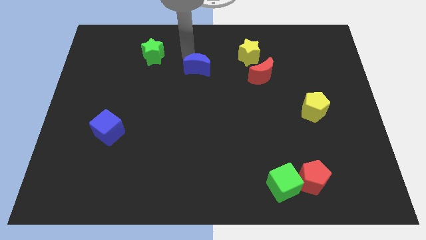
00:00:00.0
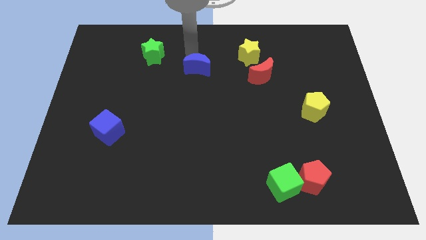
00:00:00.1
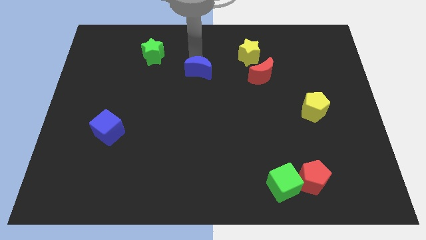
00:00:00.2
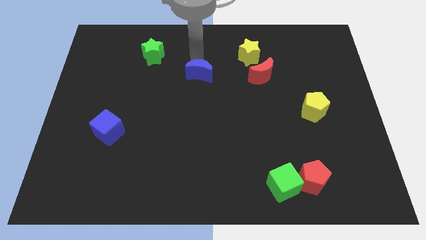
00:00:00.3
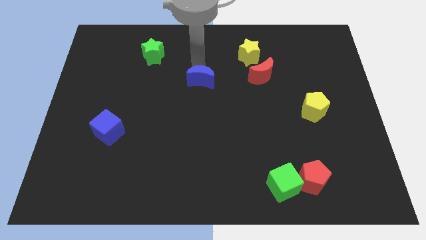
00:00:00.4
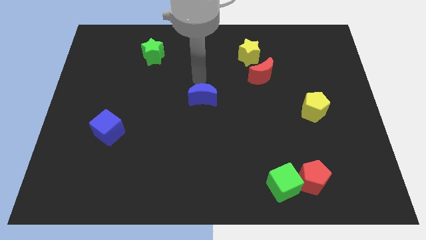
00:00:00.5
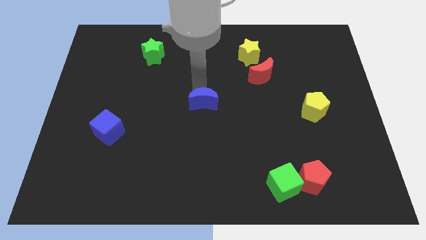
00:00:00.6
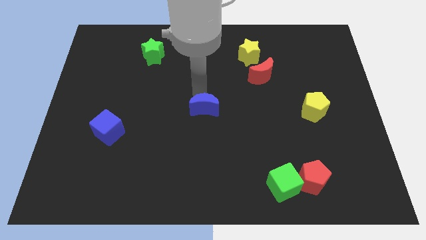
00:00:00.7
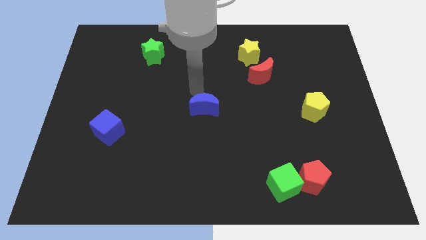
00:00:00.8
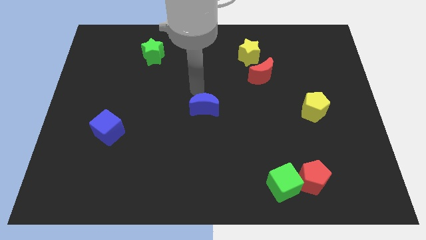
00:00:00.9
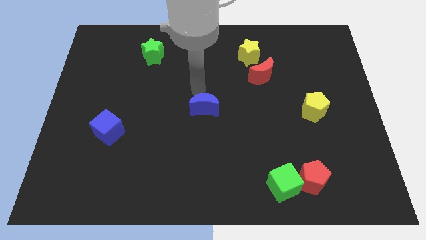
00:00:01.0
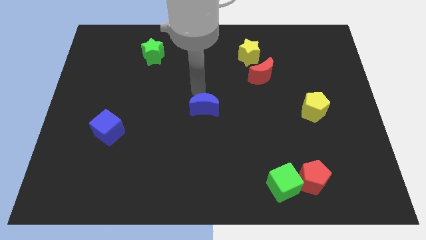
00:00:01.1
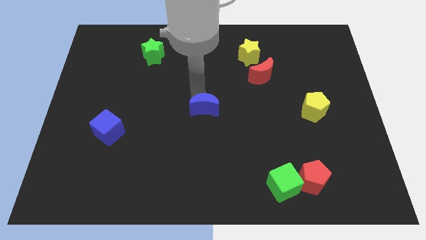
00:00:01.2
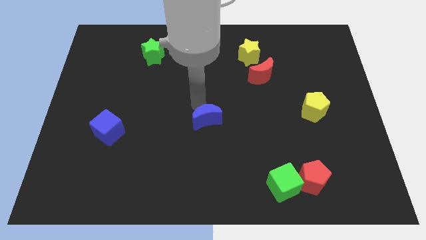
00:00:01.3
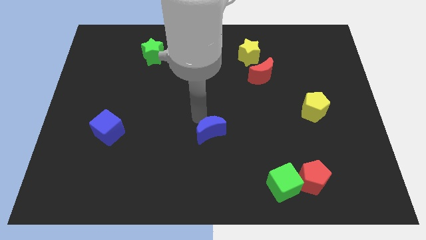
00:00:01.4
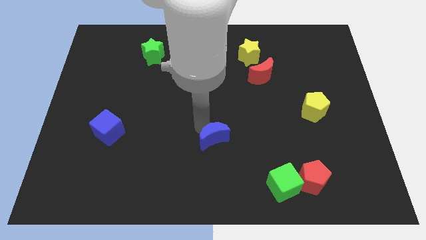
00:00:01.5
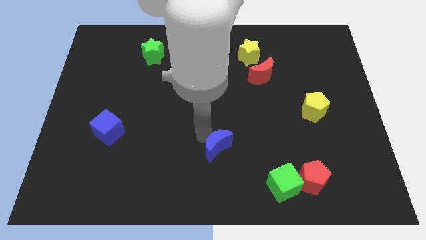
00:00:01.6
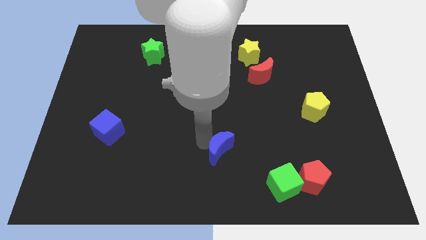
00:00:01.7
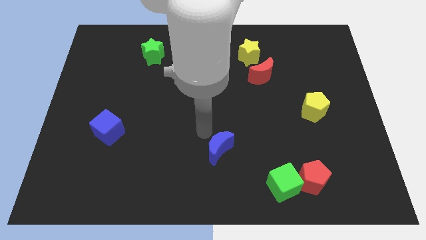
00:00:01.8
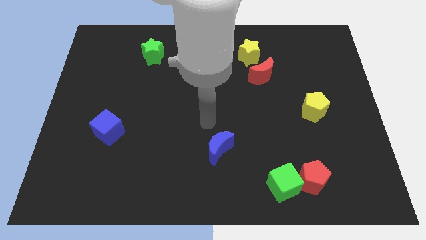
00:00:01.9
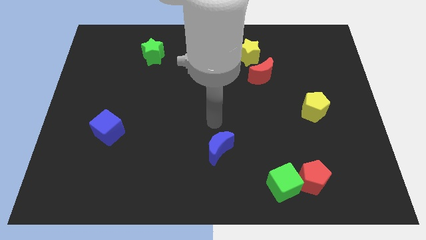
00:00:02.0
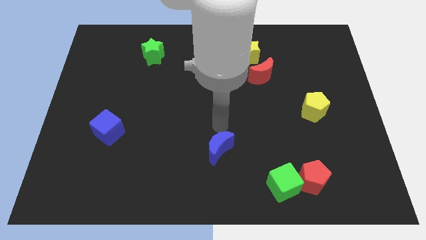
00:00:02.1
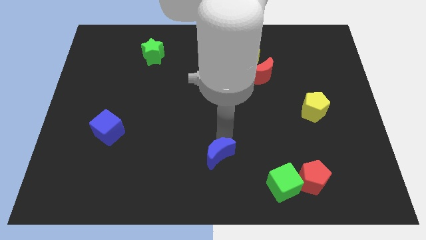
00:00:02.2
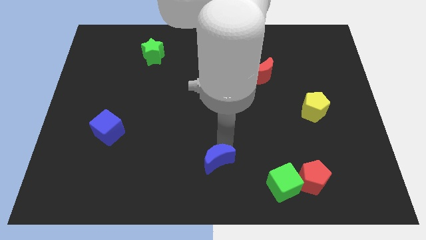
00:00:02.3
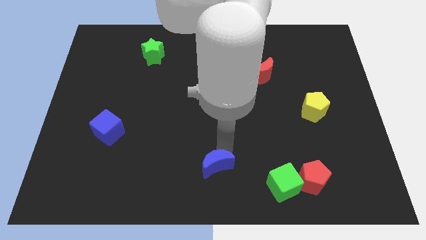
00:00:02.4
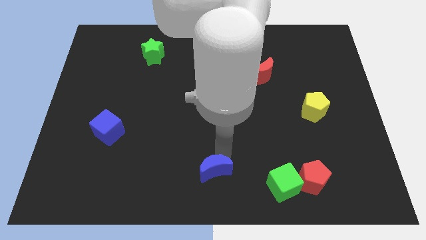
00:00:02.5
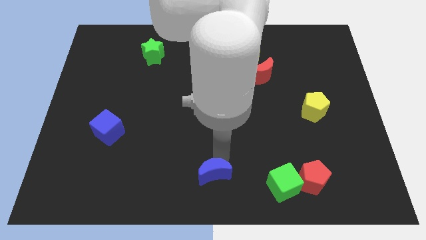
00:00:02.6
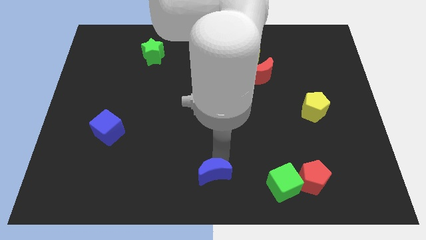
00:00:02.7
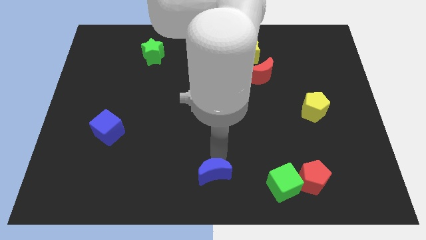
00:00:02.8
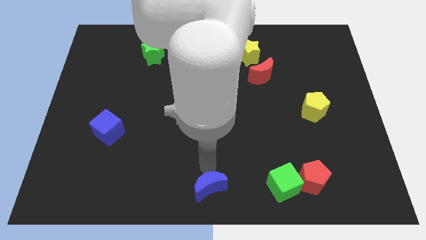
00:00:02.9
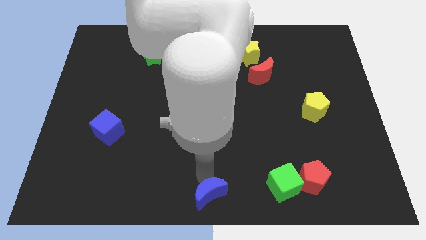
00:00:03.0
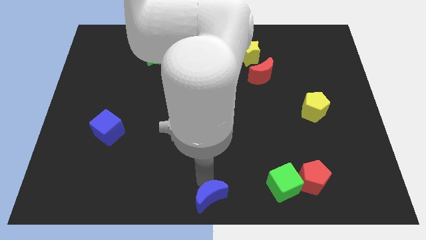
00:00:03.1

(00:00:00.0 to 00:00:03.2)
push the blue crescent to the bottom center of the board

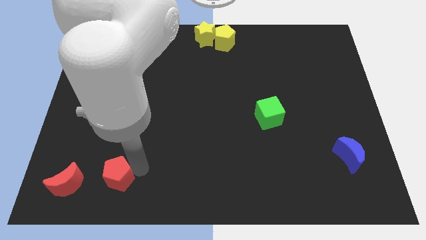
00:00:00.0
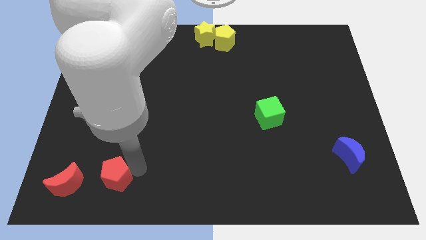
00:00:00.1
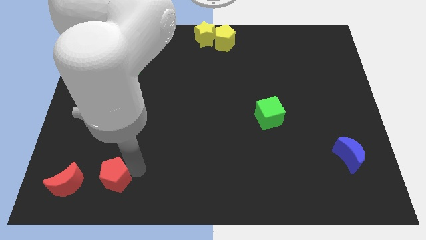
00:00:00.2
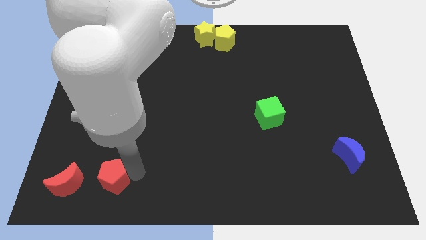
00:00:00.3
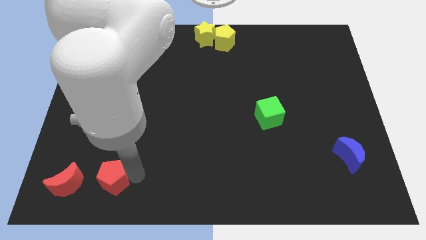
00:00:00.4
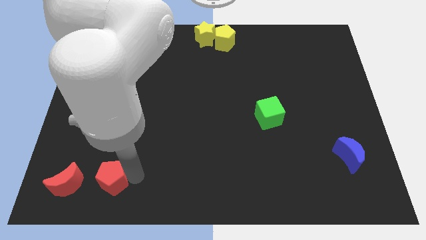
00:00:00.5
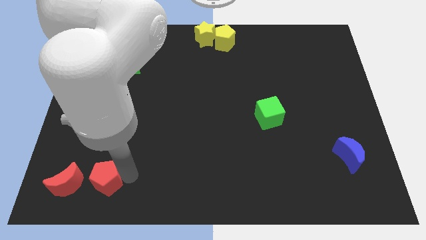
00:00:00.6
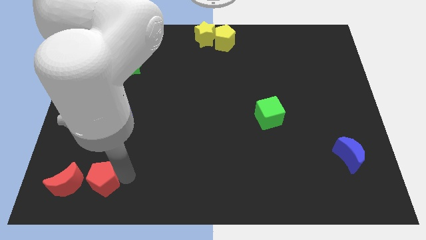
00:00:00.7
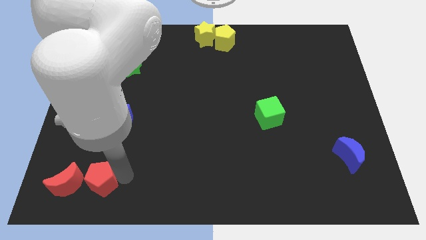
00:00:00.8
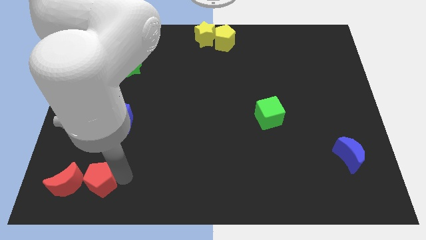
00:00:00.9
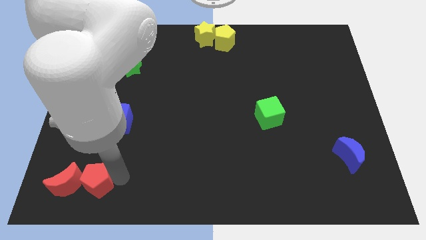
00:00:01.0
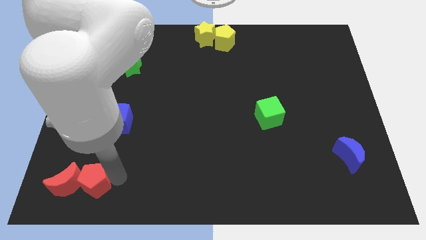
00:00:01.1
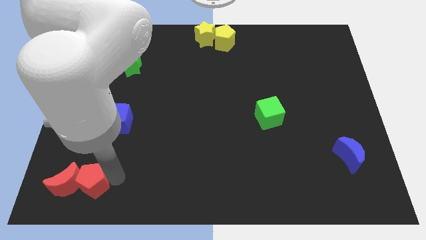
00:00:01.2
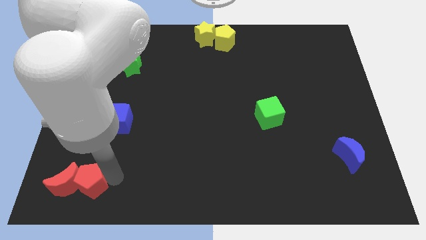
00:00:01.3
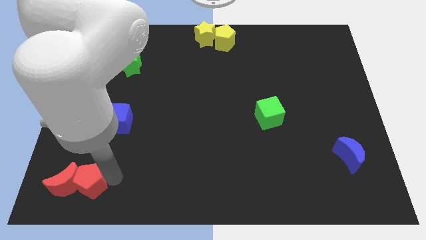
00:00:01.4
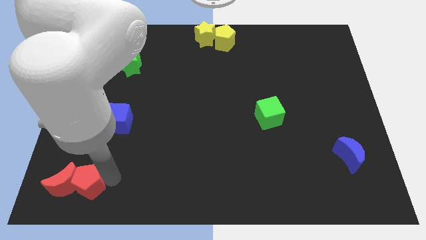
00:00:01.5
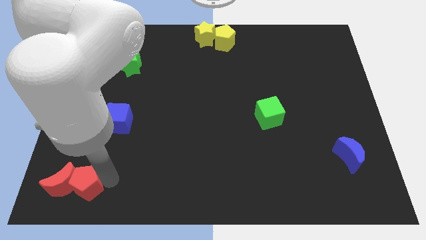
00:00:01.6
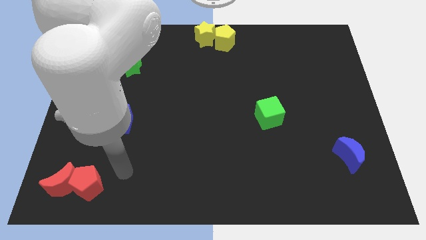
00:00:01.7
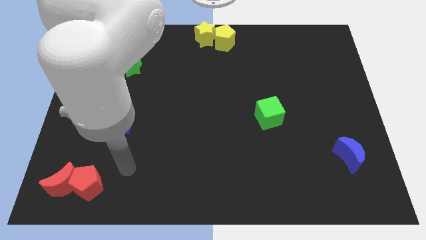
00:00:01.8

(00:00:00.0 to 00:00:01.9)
push red pentagon into the red crescent

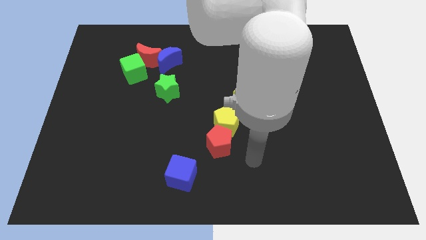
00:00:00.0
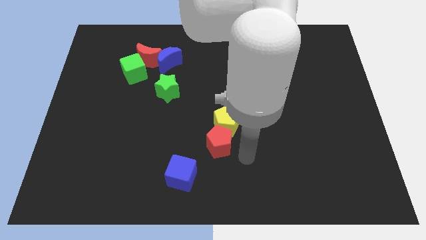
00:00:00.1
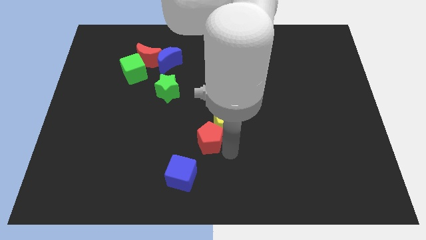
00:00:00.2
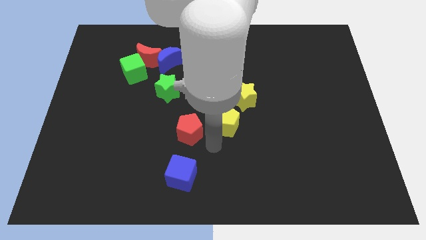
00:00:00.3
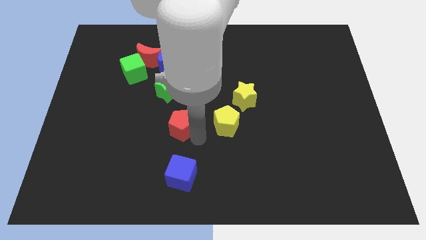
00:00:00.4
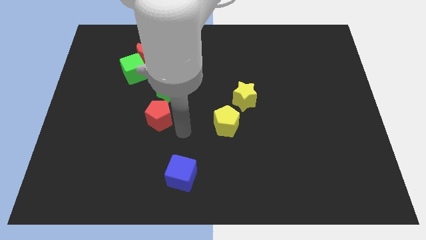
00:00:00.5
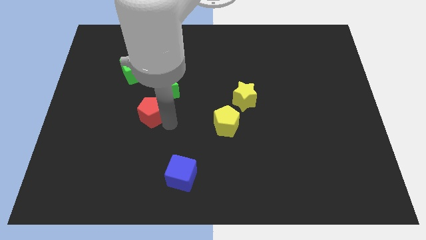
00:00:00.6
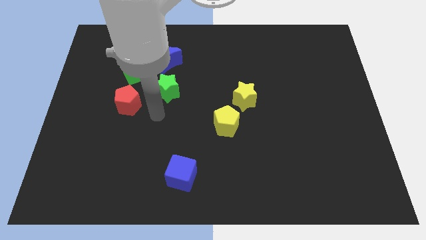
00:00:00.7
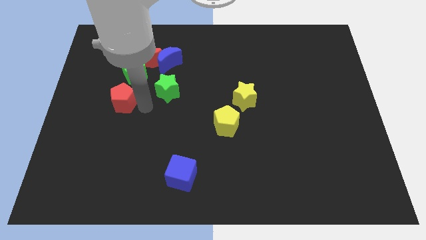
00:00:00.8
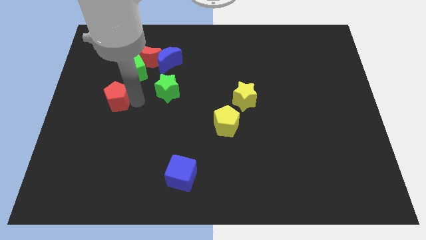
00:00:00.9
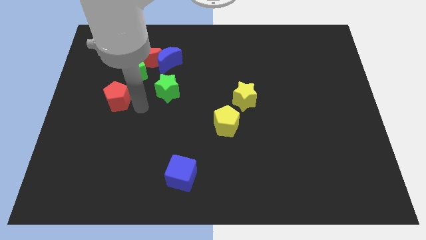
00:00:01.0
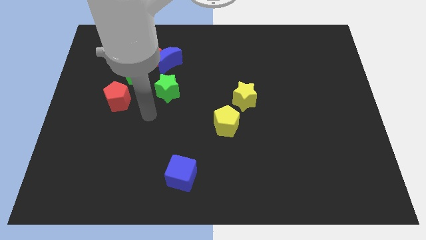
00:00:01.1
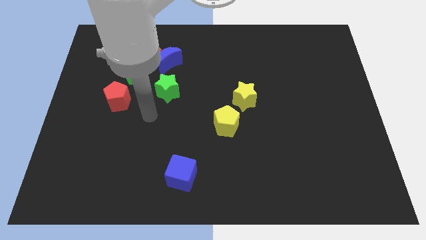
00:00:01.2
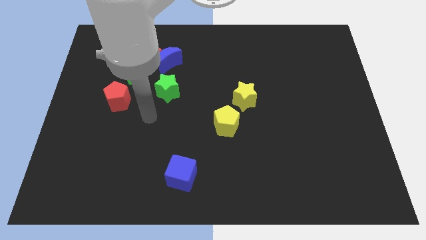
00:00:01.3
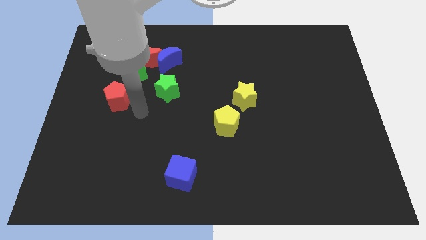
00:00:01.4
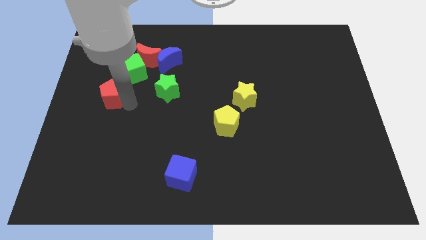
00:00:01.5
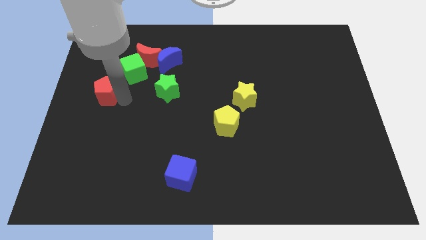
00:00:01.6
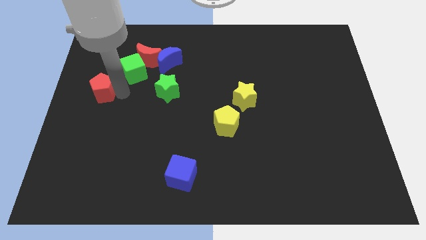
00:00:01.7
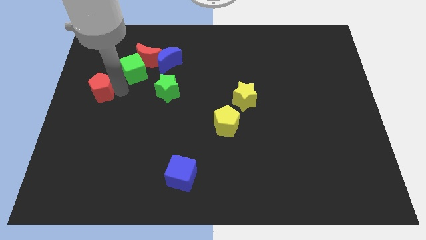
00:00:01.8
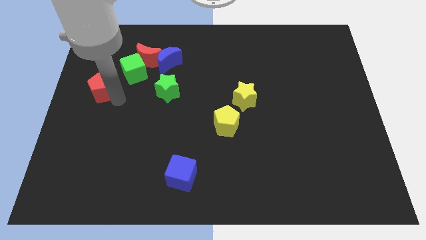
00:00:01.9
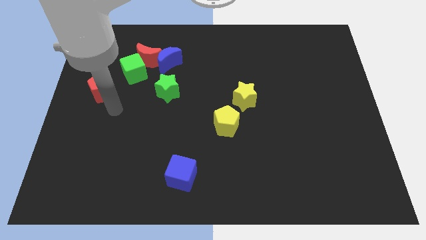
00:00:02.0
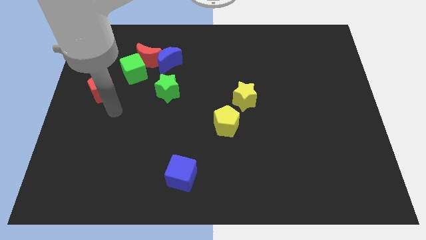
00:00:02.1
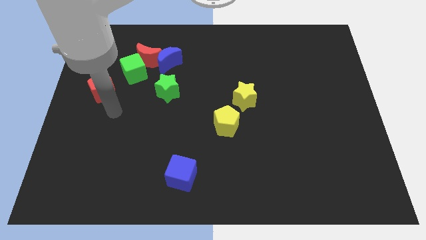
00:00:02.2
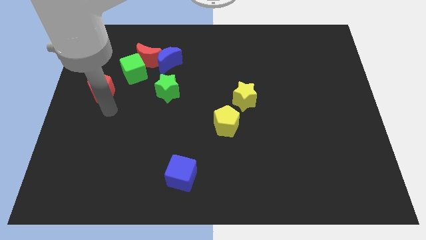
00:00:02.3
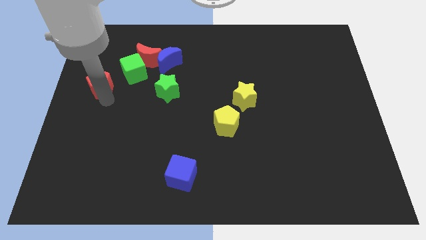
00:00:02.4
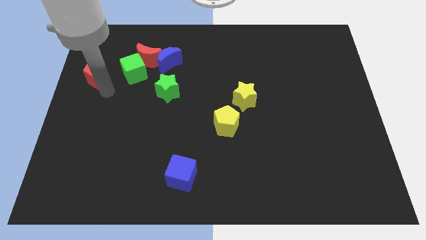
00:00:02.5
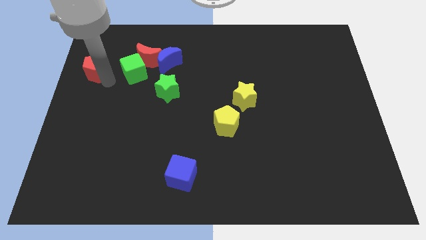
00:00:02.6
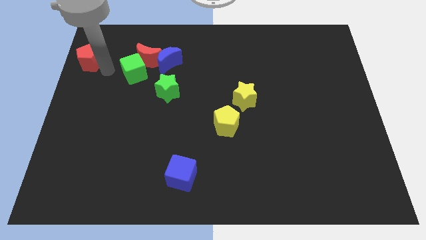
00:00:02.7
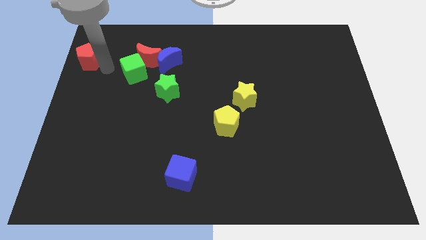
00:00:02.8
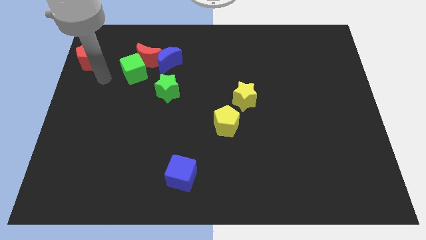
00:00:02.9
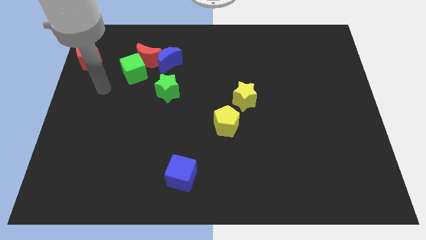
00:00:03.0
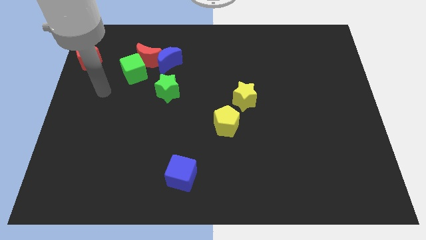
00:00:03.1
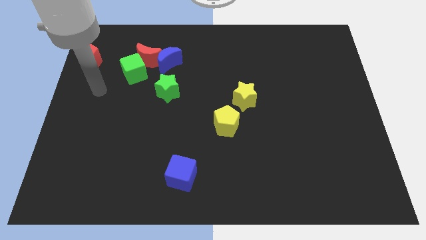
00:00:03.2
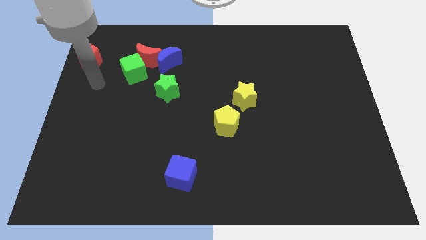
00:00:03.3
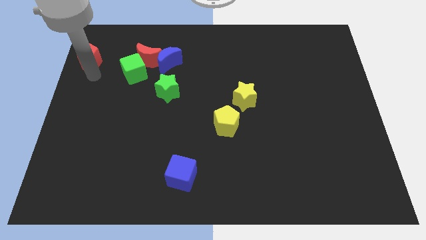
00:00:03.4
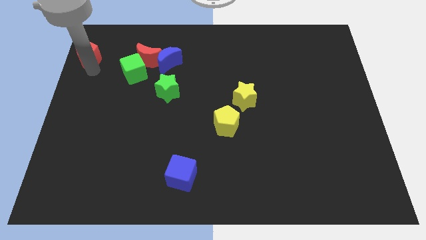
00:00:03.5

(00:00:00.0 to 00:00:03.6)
place the red pentagon to the left of red moon

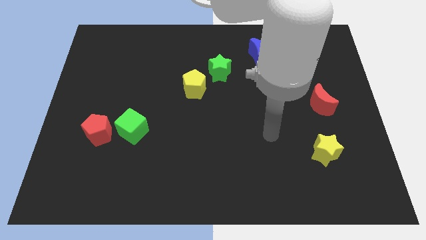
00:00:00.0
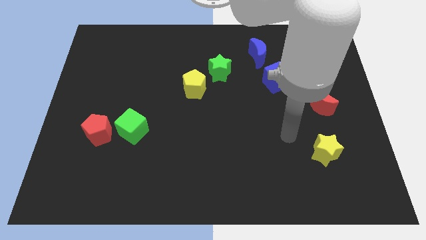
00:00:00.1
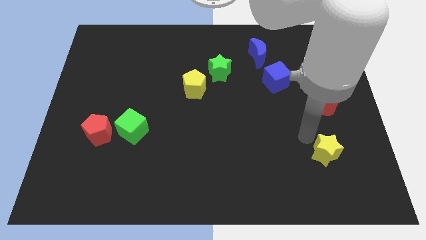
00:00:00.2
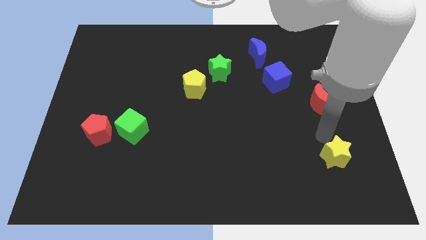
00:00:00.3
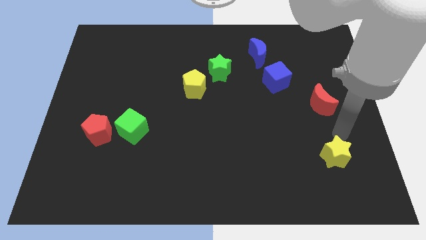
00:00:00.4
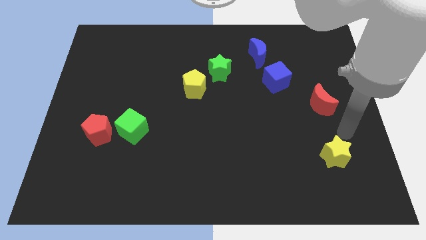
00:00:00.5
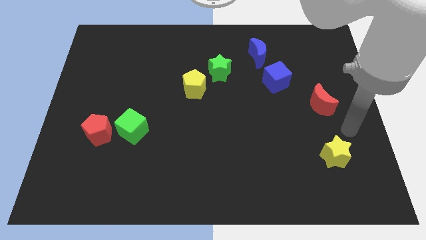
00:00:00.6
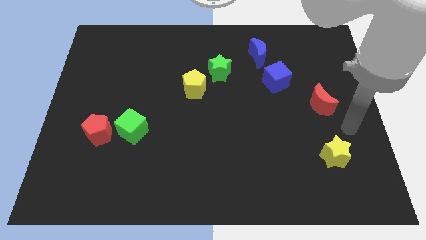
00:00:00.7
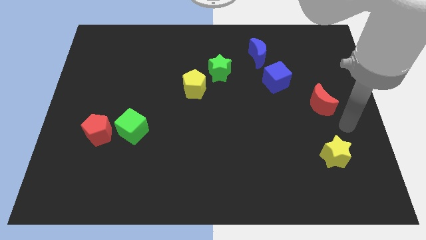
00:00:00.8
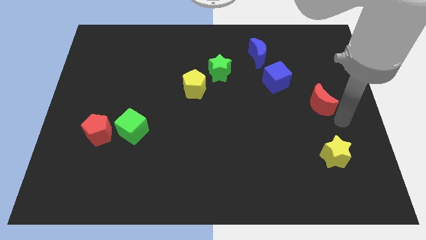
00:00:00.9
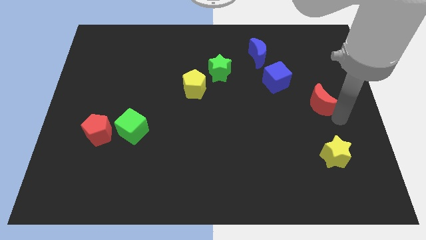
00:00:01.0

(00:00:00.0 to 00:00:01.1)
touch the yellow star
